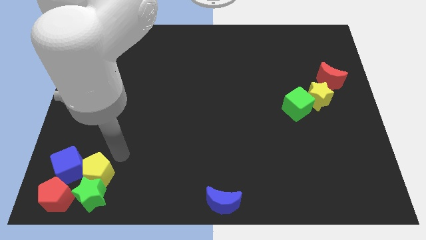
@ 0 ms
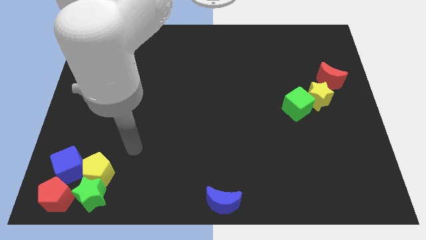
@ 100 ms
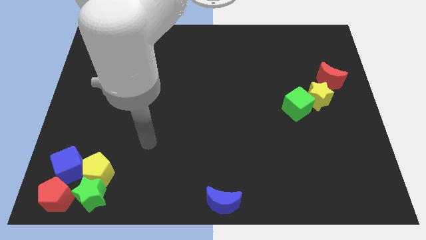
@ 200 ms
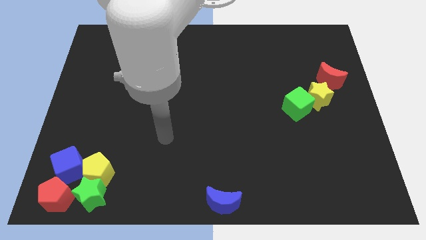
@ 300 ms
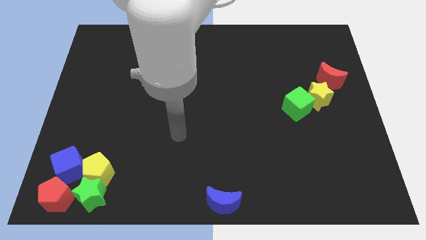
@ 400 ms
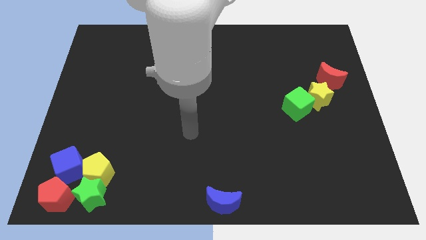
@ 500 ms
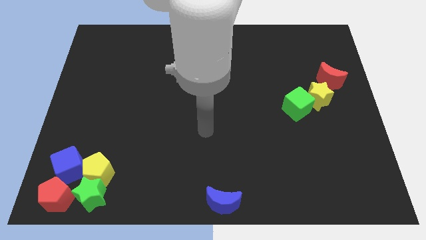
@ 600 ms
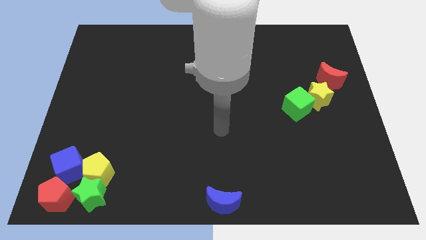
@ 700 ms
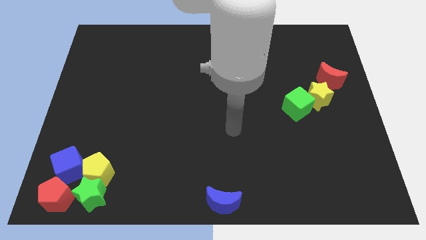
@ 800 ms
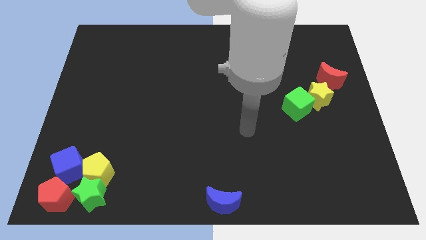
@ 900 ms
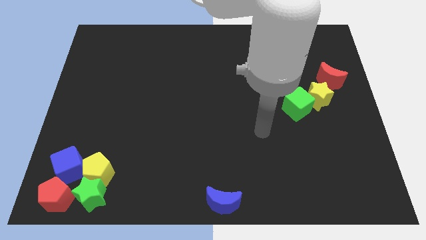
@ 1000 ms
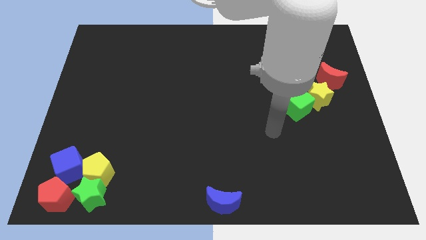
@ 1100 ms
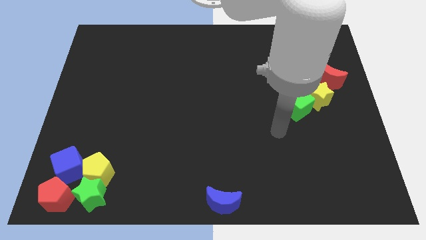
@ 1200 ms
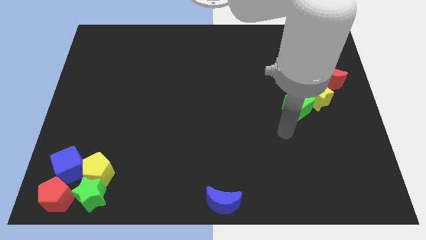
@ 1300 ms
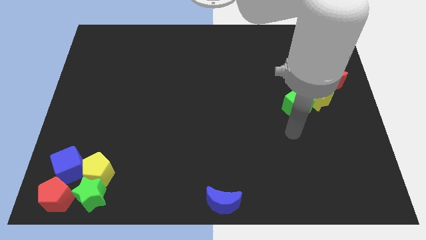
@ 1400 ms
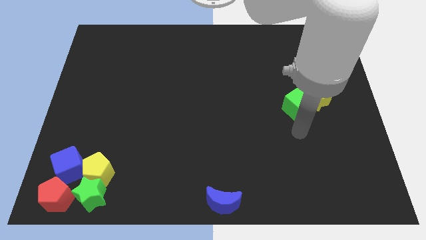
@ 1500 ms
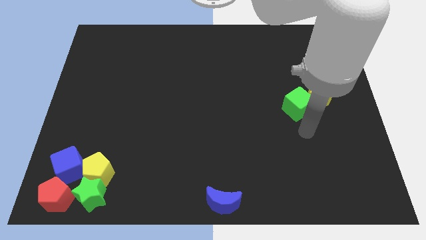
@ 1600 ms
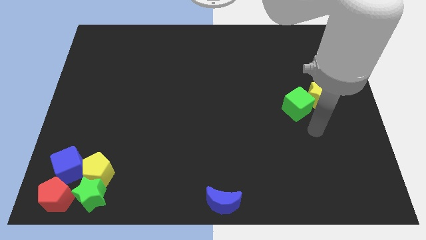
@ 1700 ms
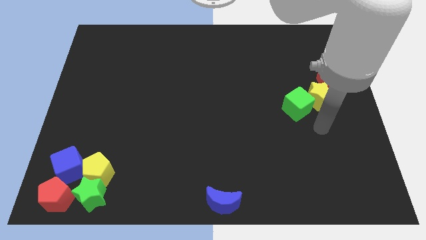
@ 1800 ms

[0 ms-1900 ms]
move the arm below the green cube

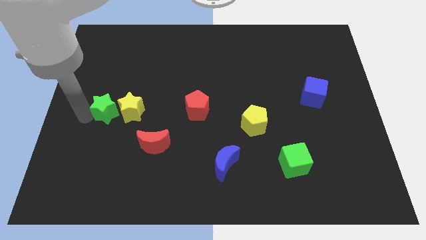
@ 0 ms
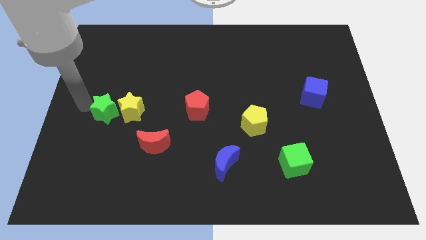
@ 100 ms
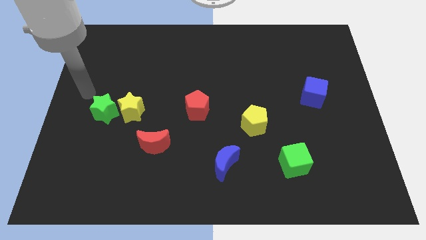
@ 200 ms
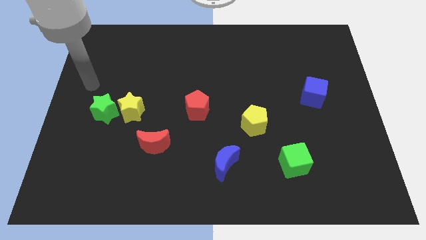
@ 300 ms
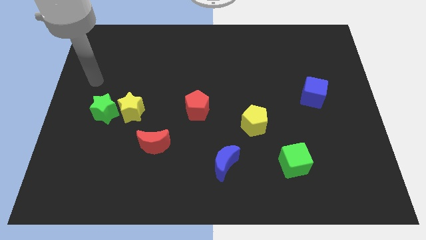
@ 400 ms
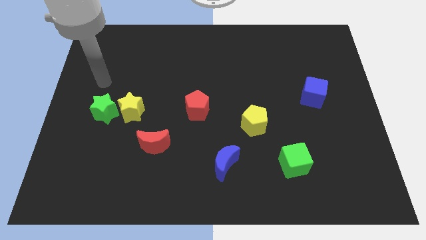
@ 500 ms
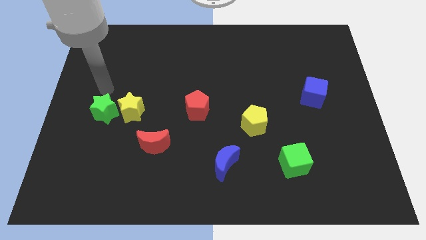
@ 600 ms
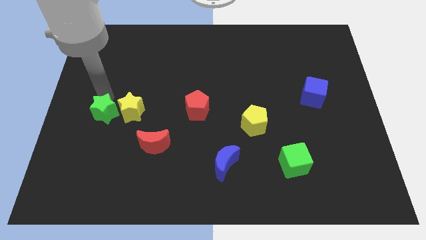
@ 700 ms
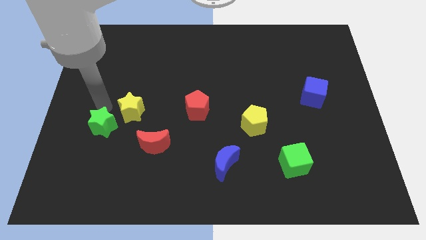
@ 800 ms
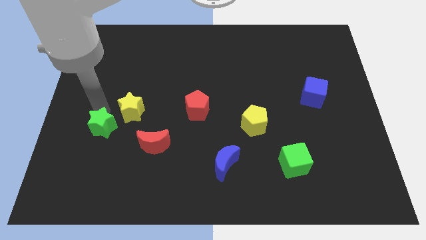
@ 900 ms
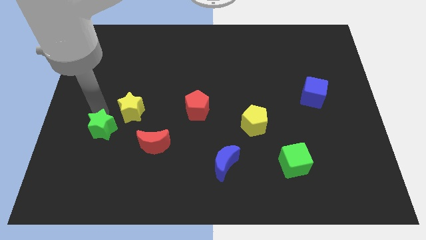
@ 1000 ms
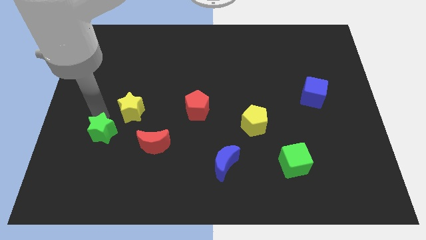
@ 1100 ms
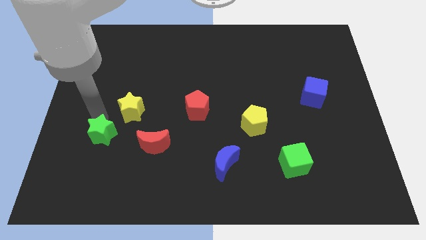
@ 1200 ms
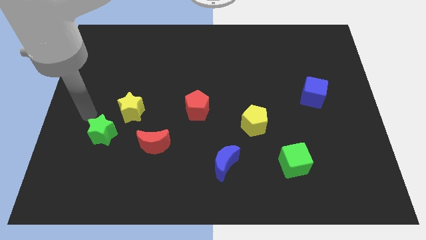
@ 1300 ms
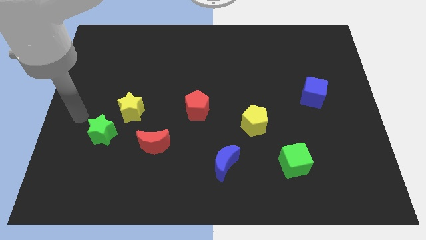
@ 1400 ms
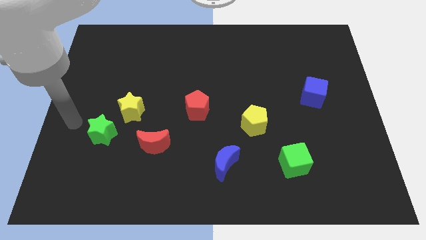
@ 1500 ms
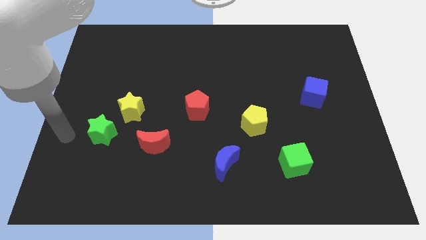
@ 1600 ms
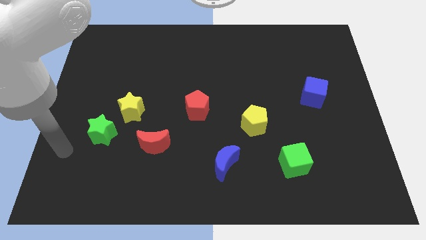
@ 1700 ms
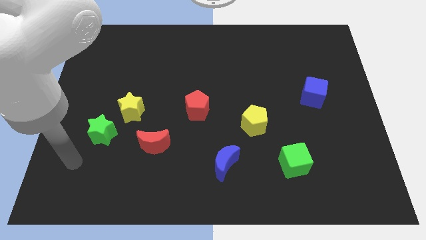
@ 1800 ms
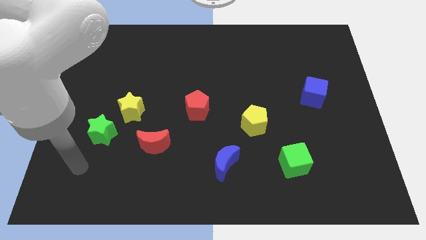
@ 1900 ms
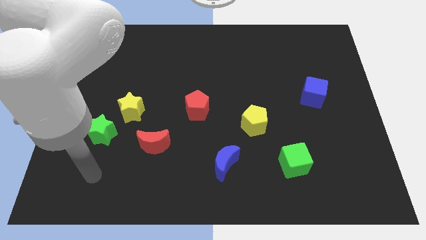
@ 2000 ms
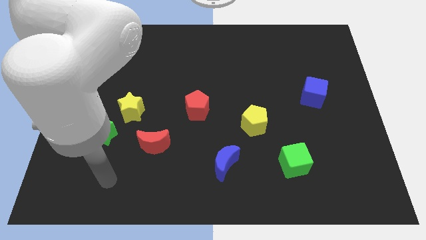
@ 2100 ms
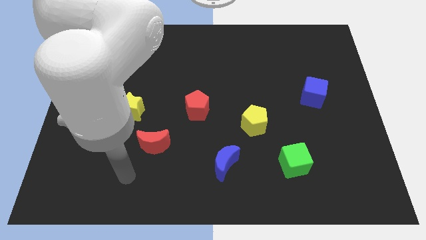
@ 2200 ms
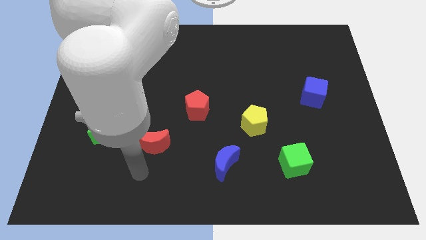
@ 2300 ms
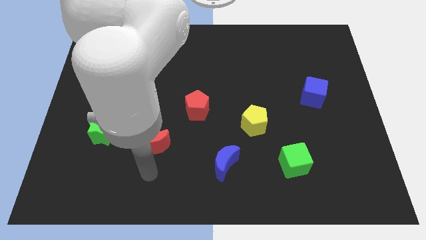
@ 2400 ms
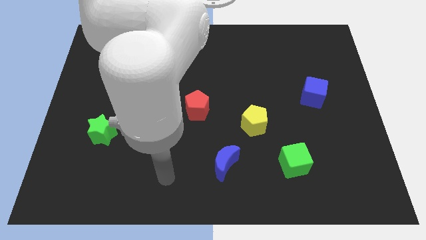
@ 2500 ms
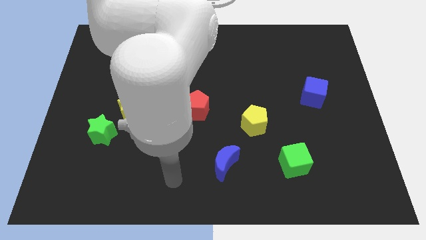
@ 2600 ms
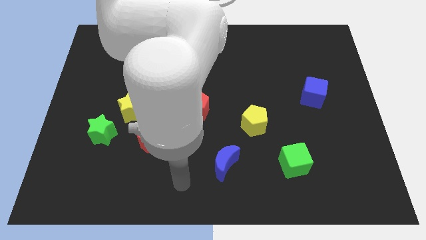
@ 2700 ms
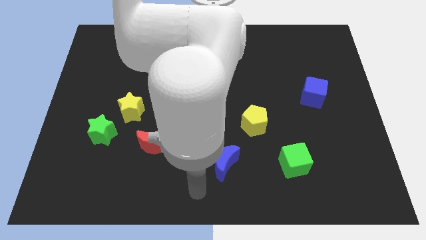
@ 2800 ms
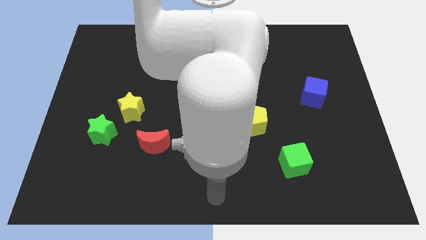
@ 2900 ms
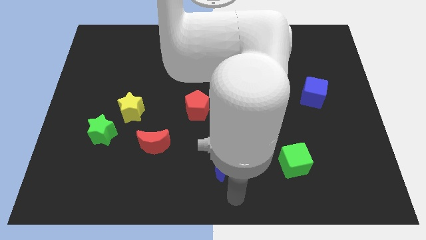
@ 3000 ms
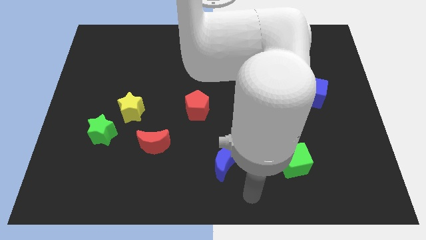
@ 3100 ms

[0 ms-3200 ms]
put the green star at the bottom left side of the yellow star

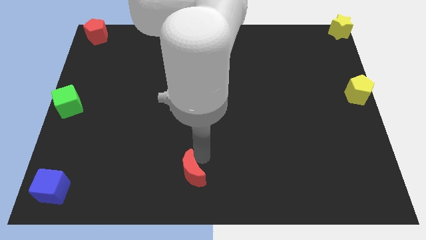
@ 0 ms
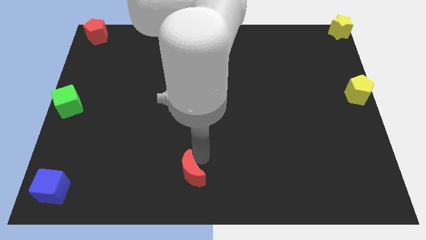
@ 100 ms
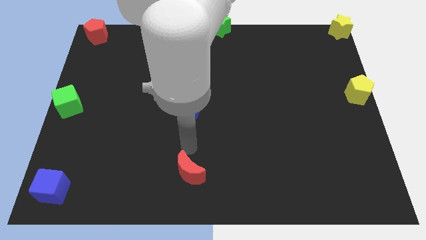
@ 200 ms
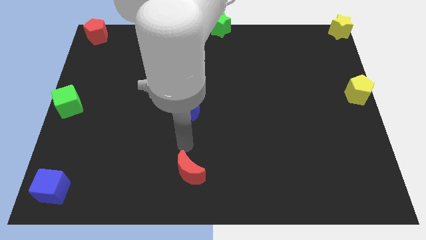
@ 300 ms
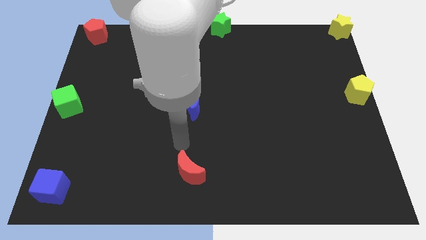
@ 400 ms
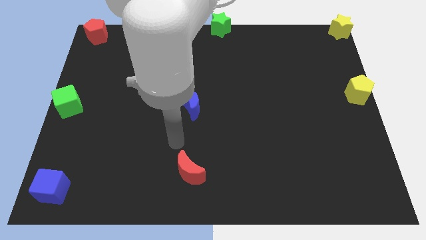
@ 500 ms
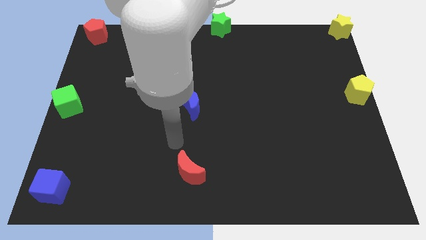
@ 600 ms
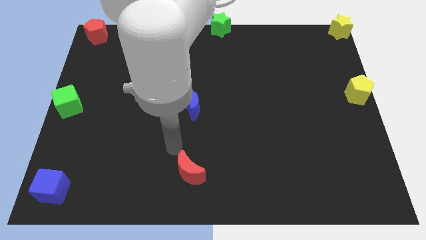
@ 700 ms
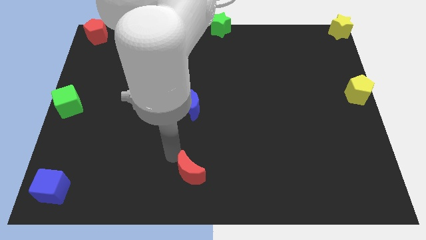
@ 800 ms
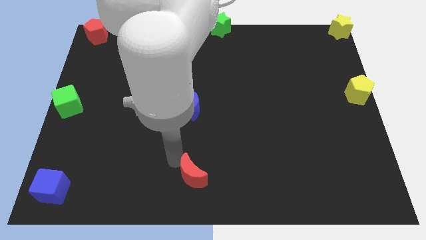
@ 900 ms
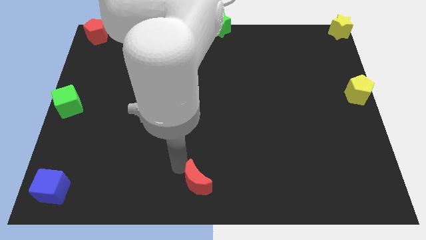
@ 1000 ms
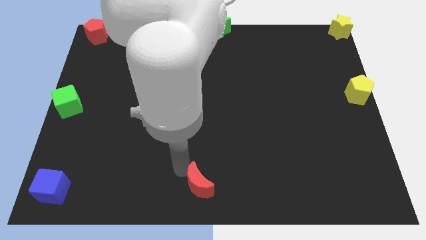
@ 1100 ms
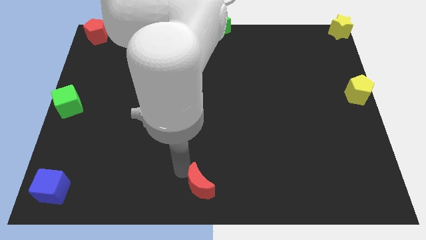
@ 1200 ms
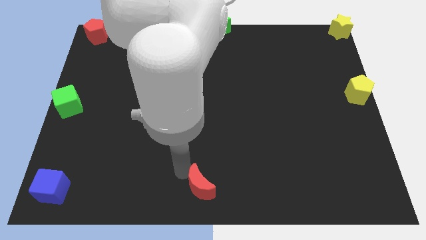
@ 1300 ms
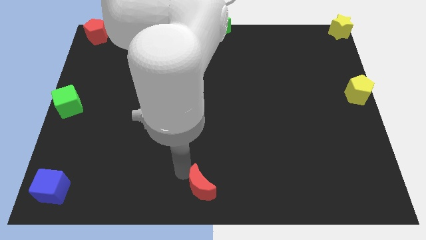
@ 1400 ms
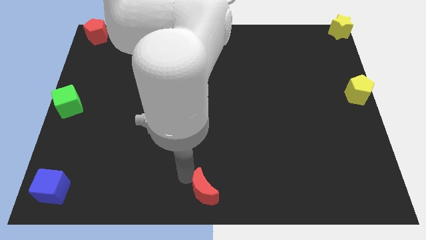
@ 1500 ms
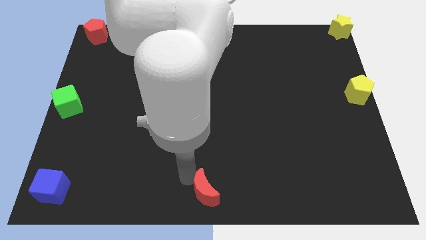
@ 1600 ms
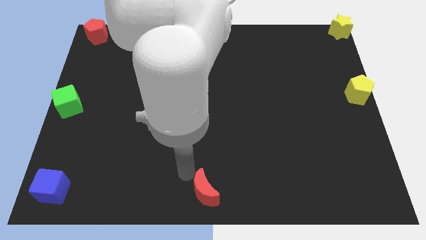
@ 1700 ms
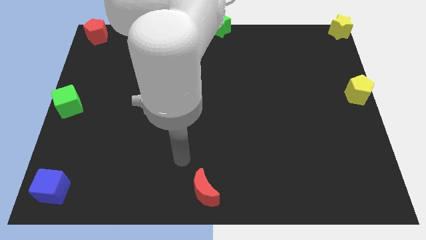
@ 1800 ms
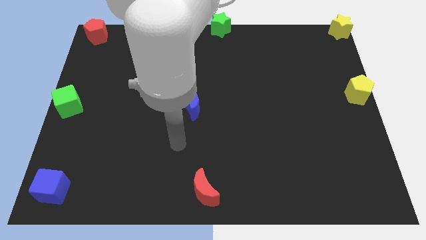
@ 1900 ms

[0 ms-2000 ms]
push the red moon to bottom center of the board

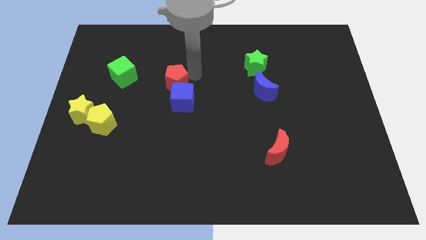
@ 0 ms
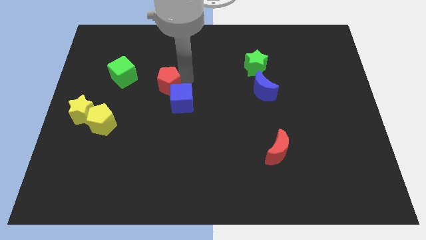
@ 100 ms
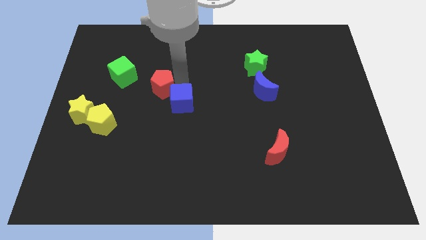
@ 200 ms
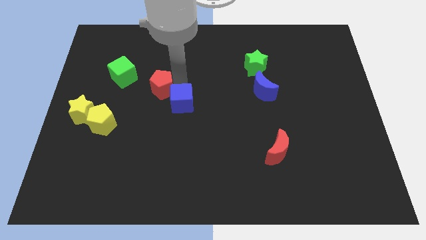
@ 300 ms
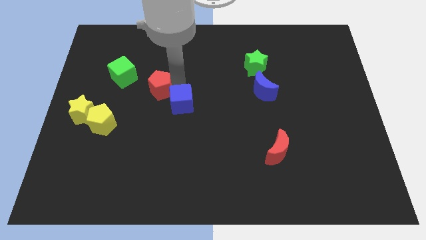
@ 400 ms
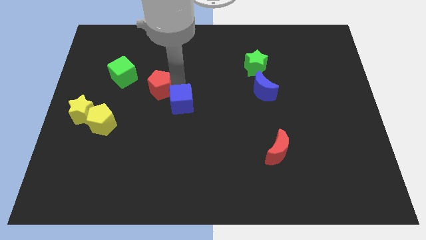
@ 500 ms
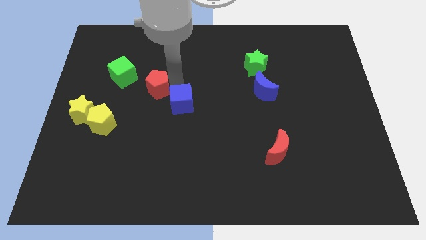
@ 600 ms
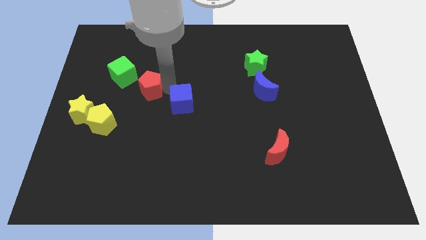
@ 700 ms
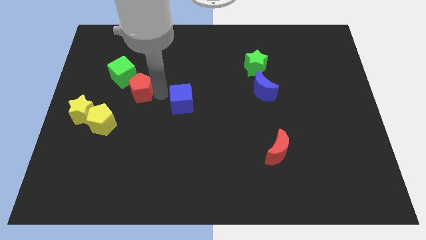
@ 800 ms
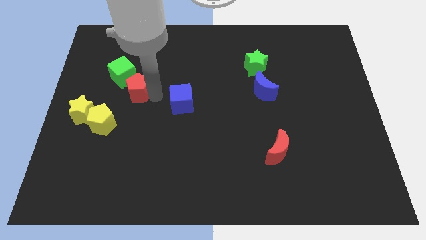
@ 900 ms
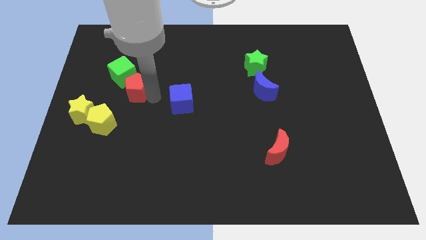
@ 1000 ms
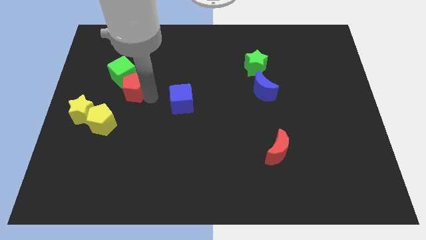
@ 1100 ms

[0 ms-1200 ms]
place red pentagon diagonally towards green cube

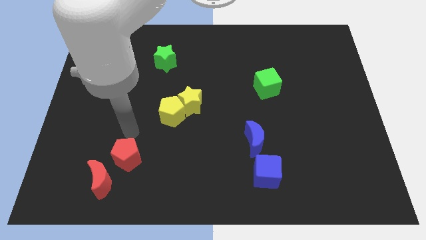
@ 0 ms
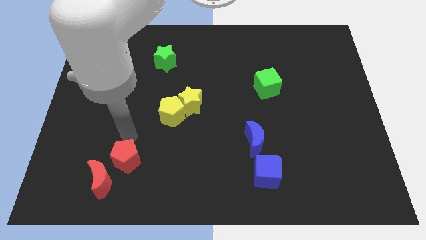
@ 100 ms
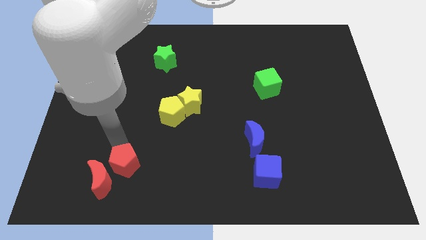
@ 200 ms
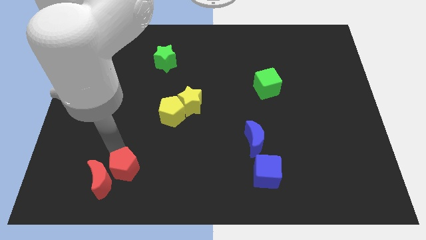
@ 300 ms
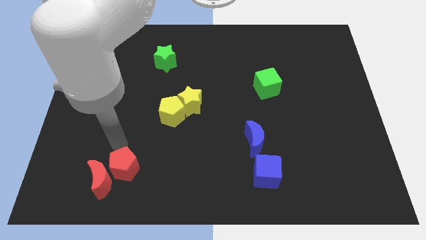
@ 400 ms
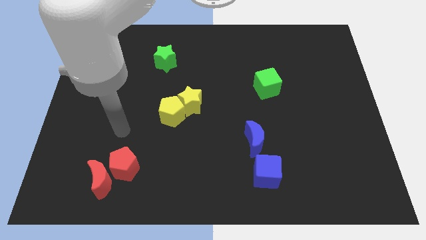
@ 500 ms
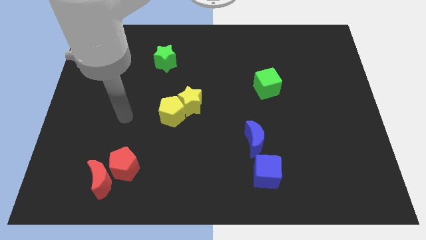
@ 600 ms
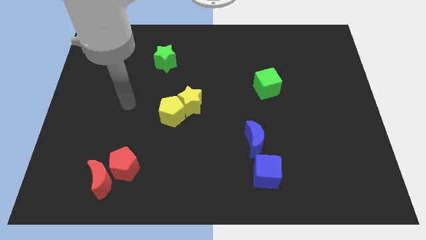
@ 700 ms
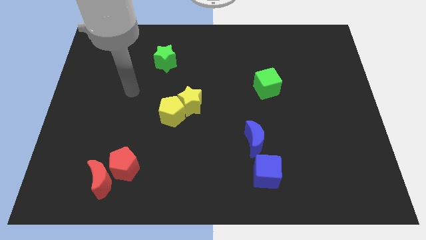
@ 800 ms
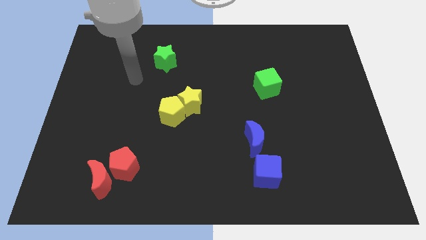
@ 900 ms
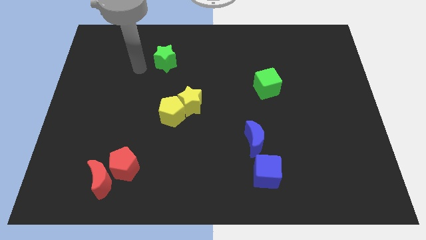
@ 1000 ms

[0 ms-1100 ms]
move your arm away from the red pentagon
